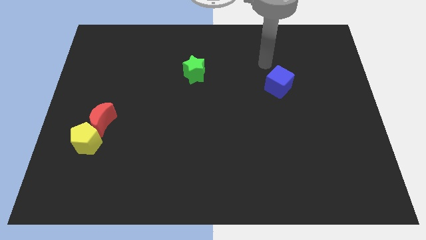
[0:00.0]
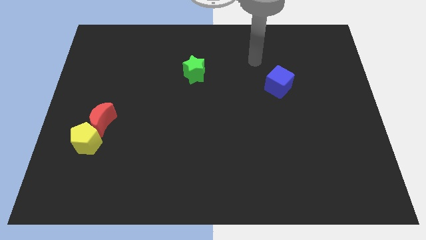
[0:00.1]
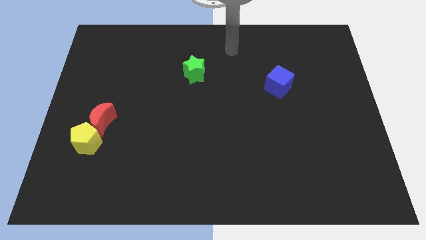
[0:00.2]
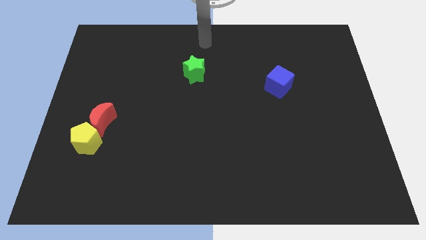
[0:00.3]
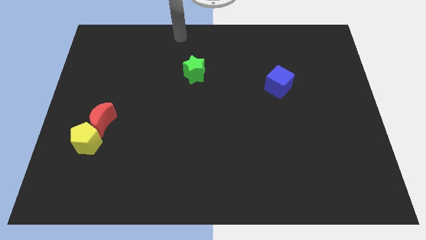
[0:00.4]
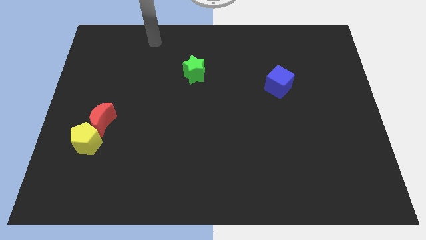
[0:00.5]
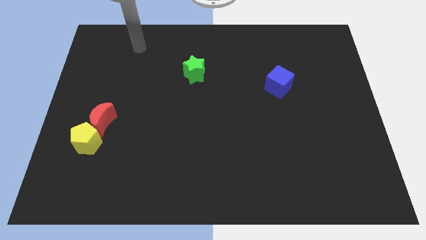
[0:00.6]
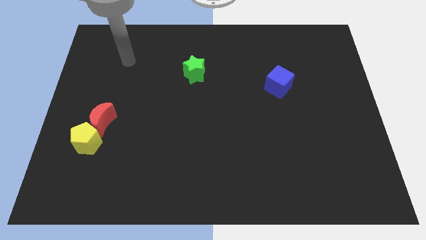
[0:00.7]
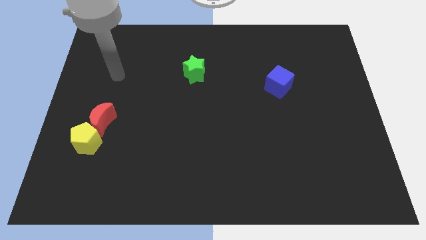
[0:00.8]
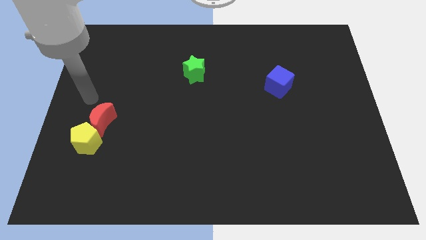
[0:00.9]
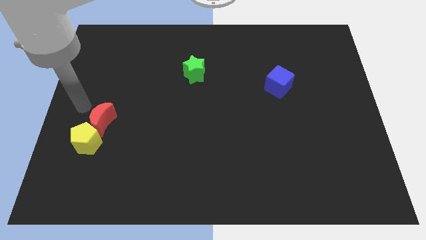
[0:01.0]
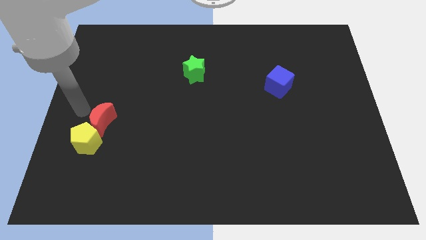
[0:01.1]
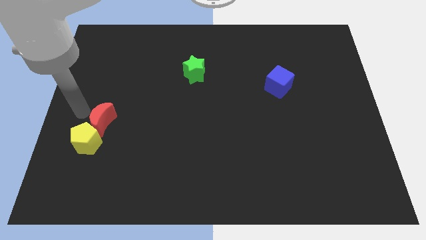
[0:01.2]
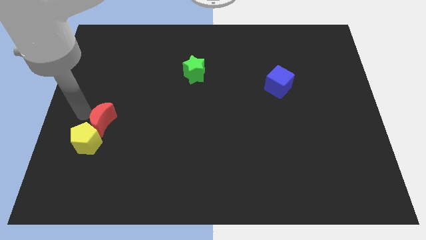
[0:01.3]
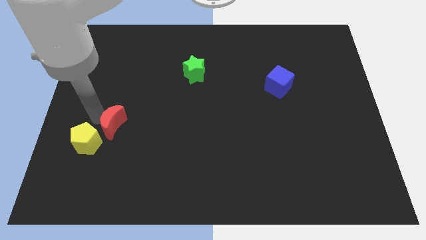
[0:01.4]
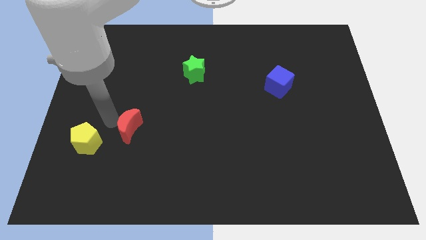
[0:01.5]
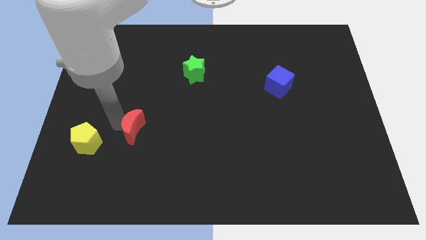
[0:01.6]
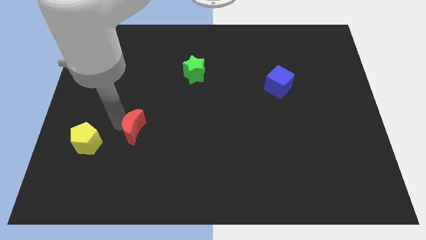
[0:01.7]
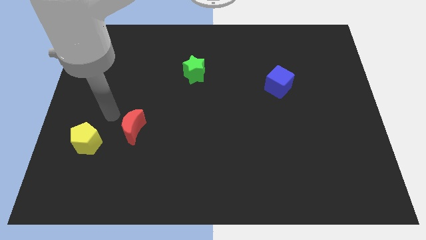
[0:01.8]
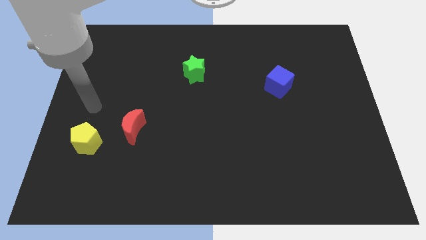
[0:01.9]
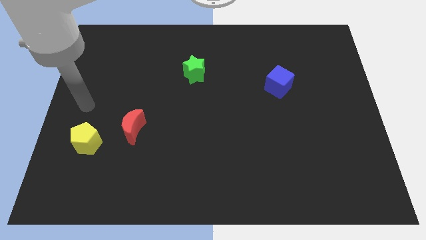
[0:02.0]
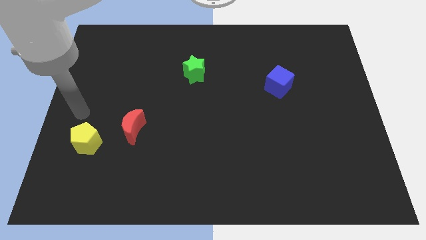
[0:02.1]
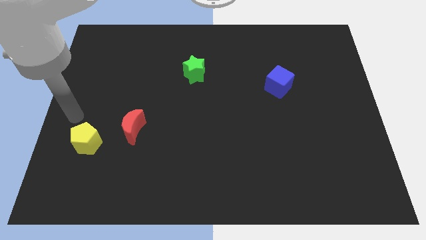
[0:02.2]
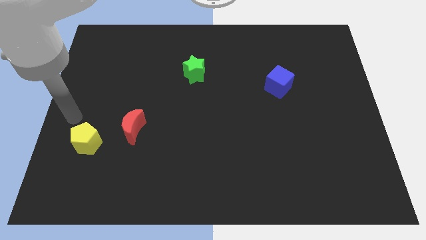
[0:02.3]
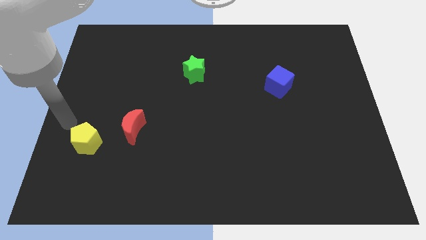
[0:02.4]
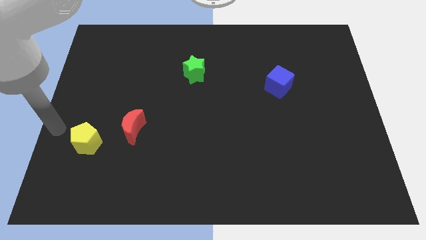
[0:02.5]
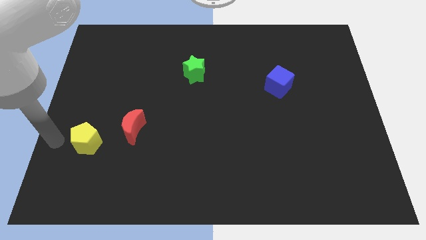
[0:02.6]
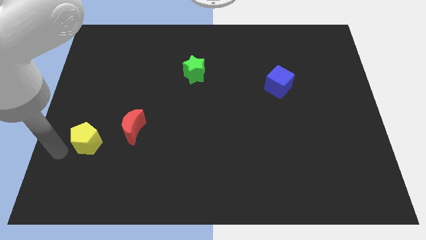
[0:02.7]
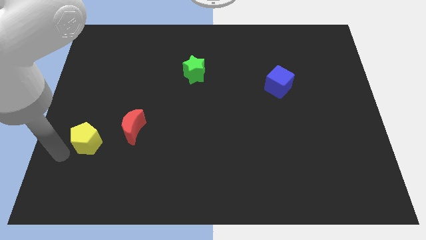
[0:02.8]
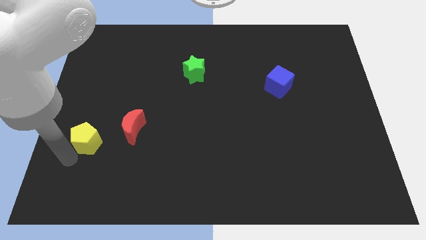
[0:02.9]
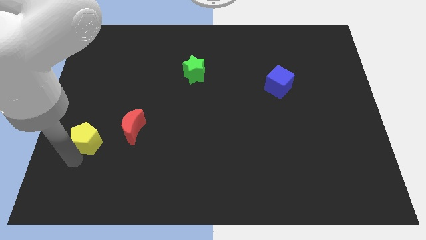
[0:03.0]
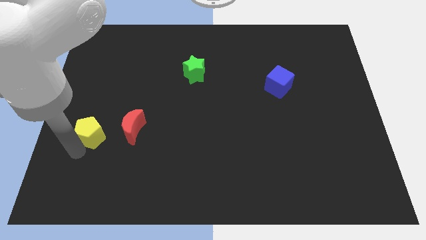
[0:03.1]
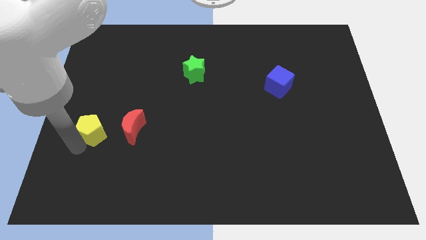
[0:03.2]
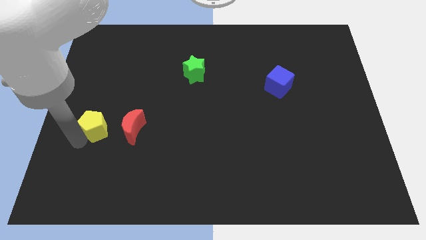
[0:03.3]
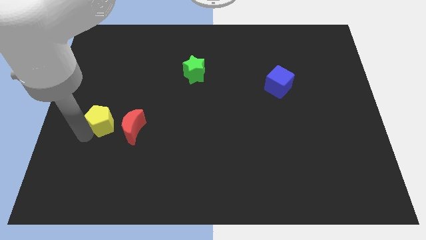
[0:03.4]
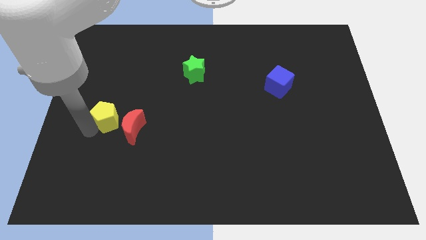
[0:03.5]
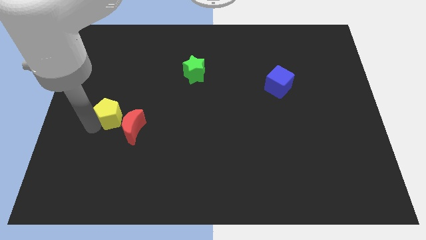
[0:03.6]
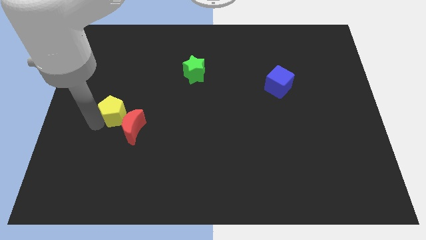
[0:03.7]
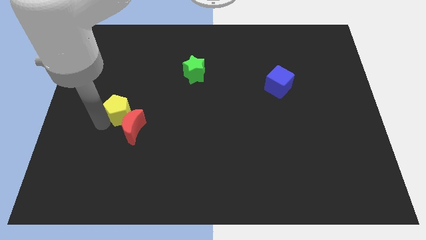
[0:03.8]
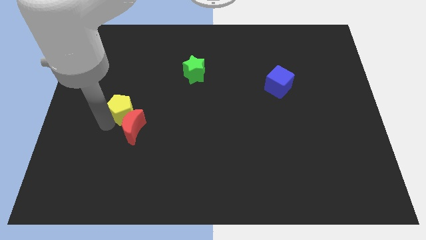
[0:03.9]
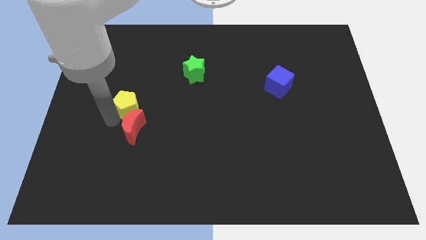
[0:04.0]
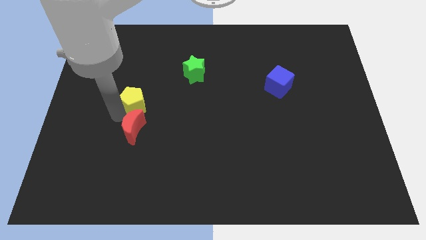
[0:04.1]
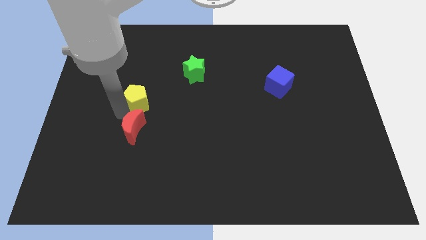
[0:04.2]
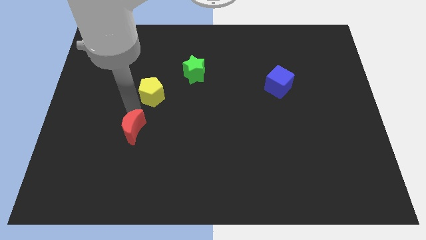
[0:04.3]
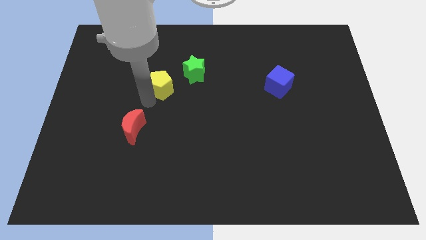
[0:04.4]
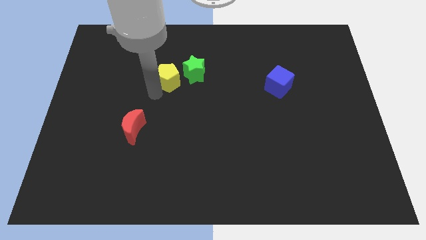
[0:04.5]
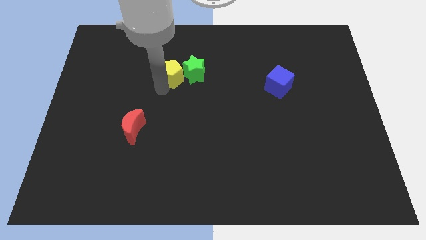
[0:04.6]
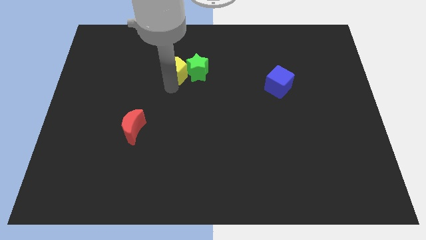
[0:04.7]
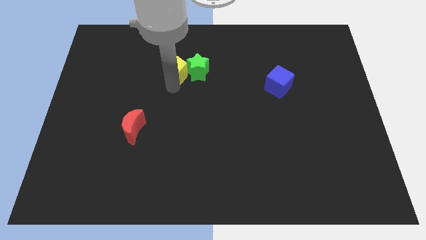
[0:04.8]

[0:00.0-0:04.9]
put the yellow pentagon towards the star

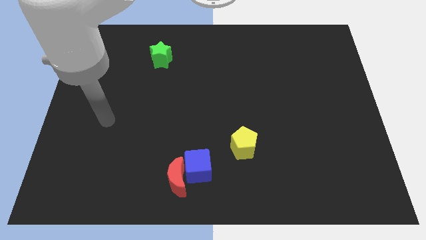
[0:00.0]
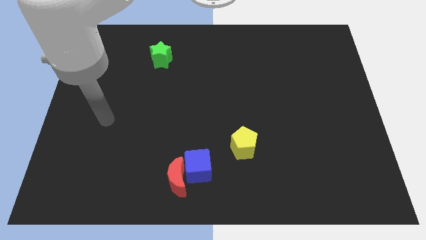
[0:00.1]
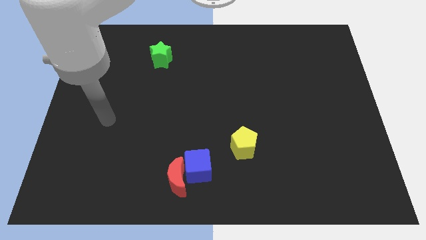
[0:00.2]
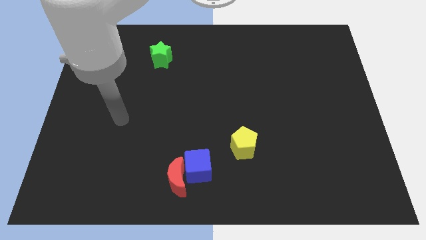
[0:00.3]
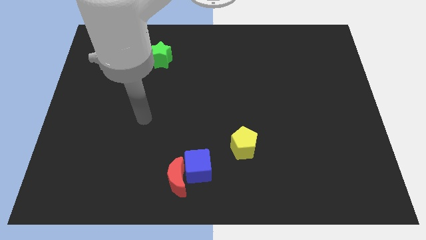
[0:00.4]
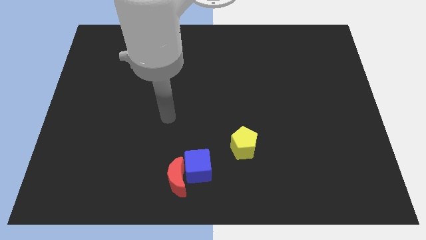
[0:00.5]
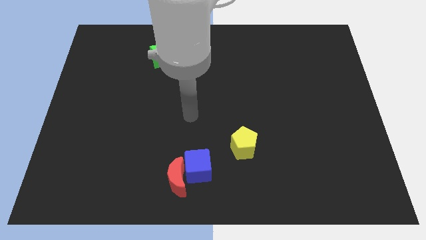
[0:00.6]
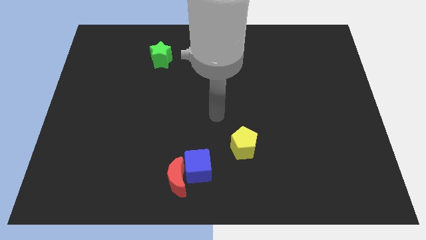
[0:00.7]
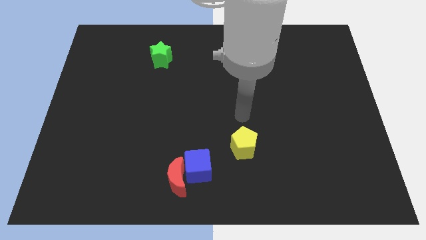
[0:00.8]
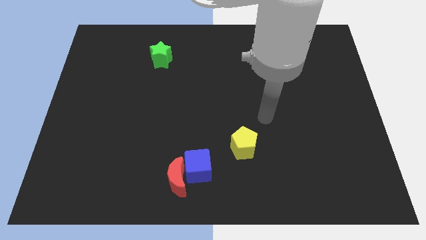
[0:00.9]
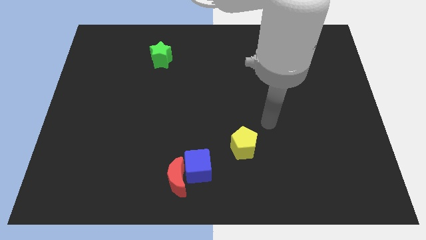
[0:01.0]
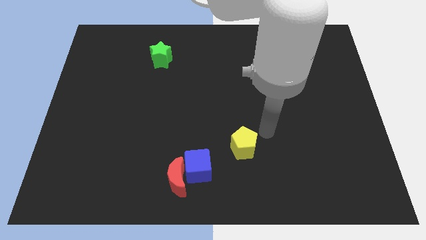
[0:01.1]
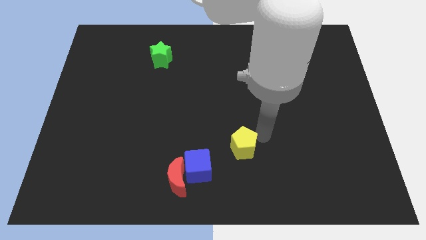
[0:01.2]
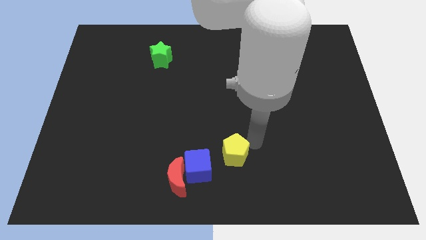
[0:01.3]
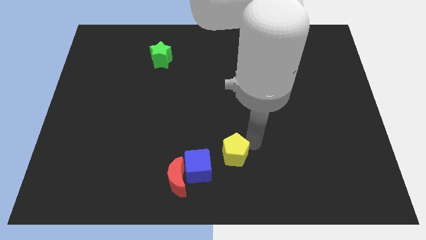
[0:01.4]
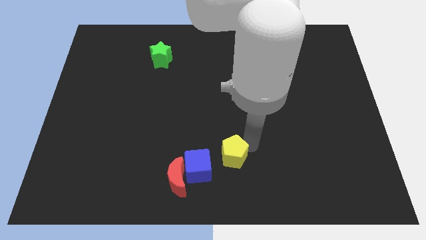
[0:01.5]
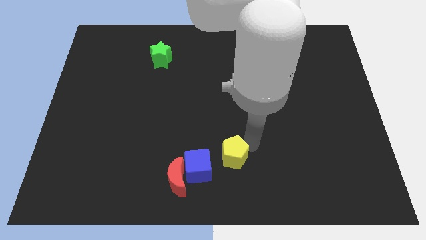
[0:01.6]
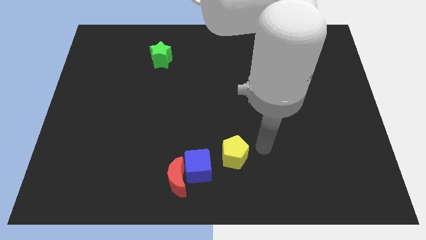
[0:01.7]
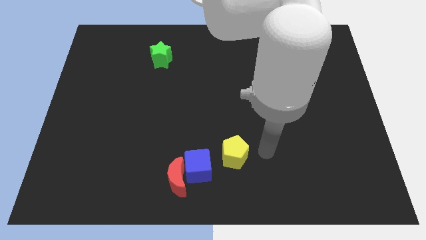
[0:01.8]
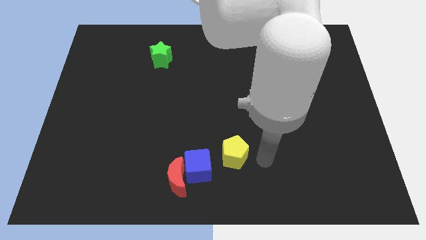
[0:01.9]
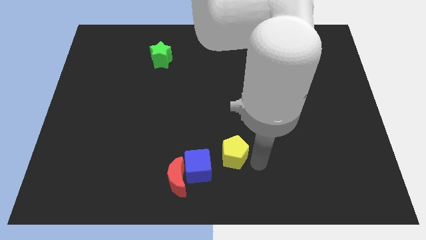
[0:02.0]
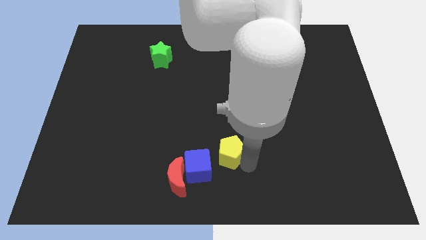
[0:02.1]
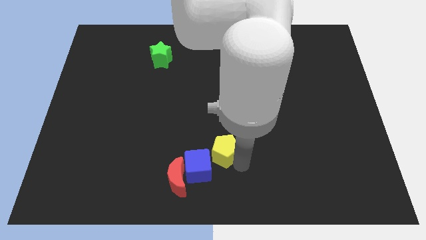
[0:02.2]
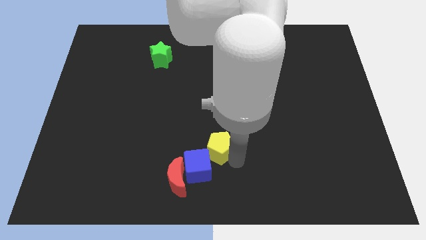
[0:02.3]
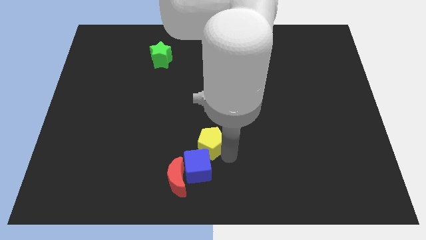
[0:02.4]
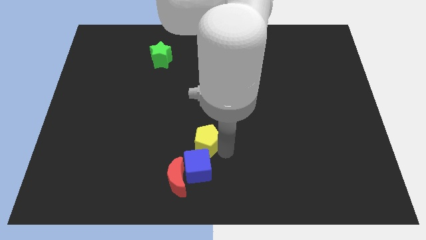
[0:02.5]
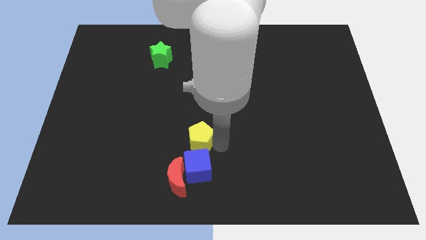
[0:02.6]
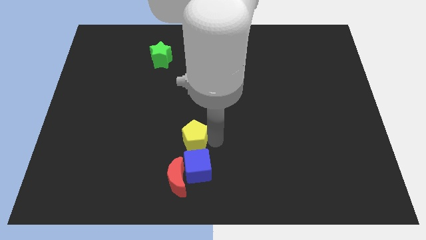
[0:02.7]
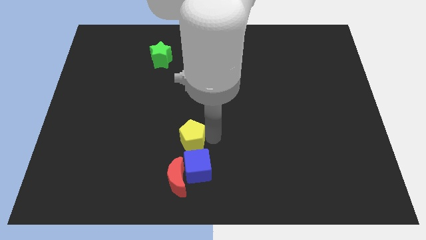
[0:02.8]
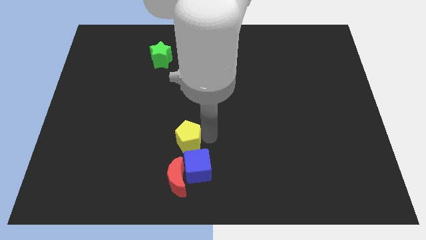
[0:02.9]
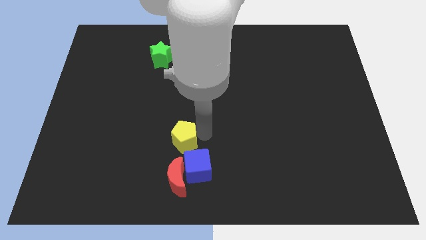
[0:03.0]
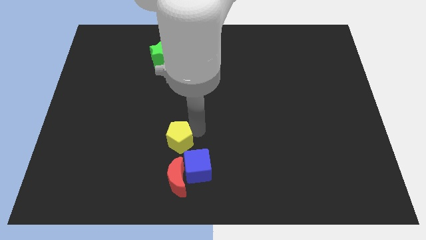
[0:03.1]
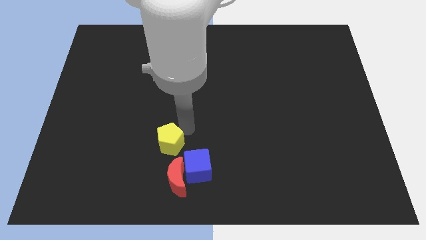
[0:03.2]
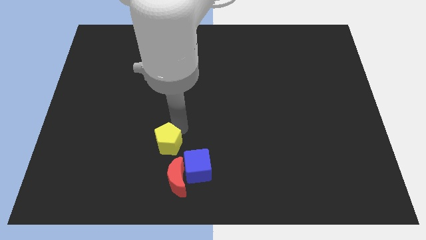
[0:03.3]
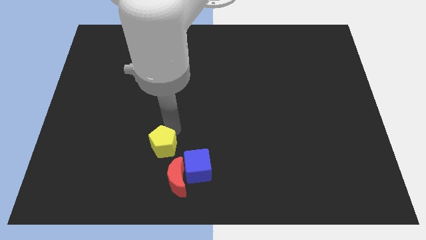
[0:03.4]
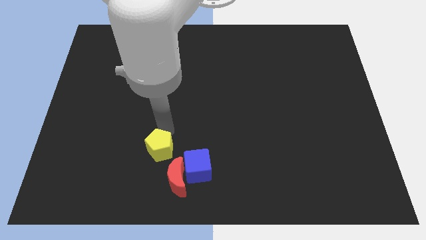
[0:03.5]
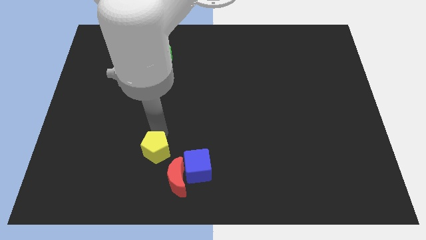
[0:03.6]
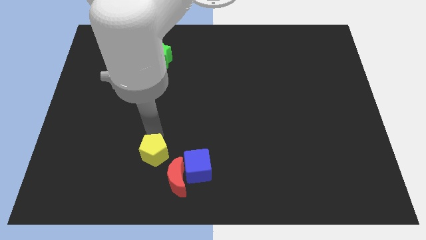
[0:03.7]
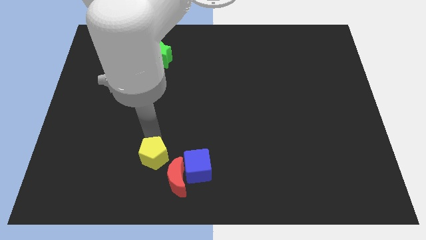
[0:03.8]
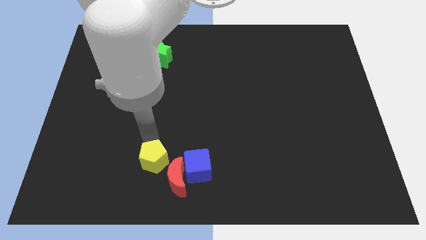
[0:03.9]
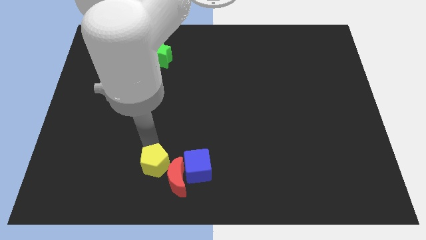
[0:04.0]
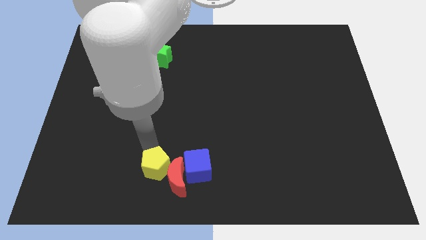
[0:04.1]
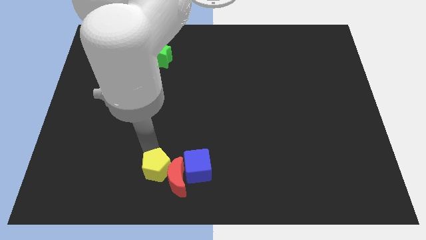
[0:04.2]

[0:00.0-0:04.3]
push the pentagon close to the moon
